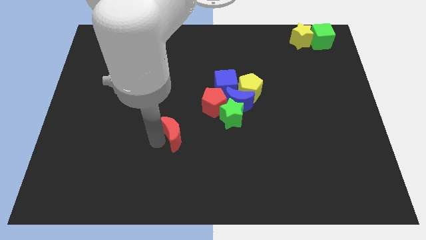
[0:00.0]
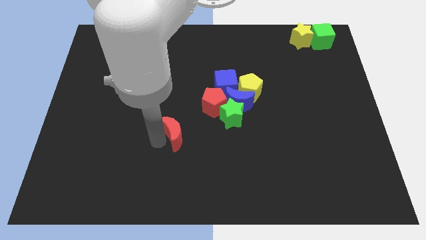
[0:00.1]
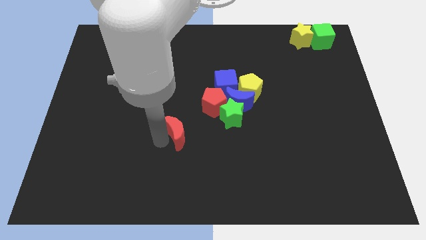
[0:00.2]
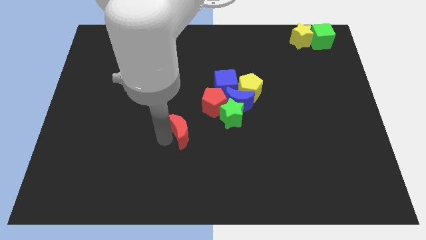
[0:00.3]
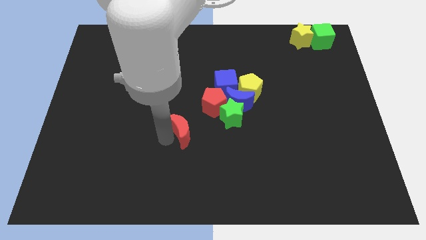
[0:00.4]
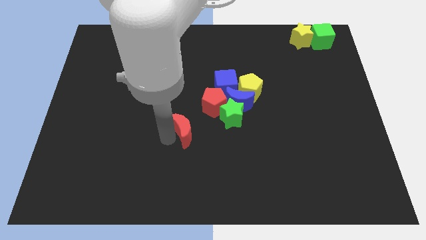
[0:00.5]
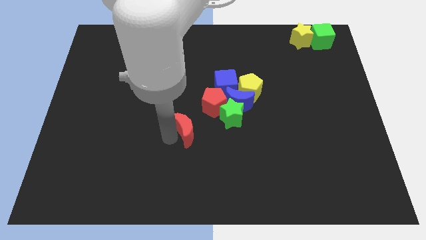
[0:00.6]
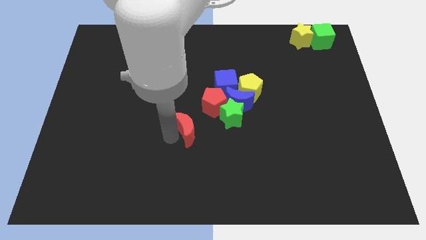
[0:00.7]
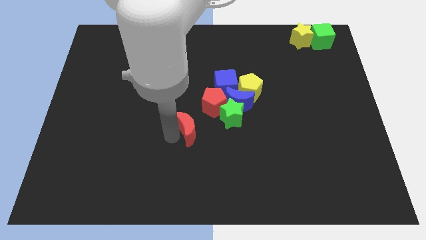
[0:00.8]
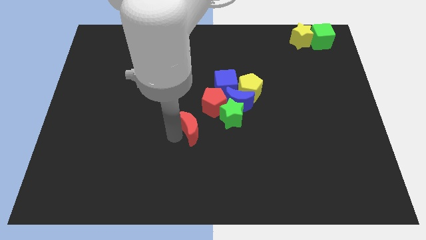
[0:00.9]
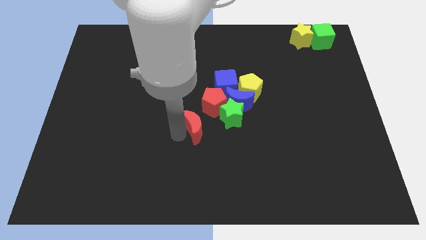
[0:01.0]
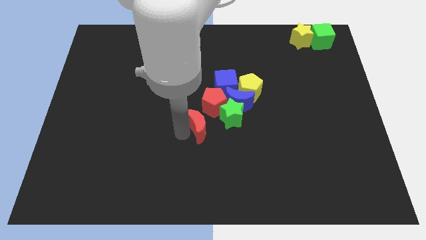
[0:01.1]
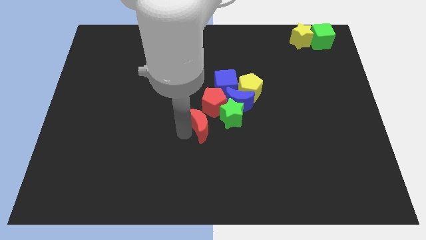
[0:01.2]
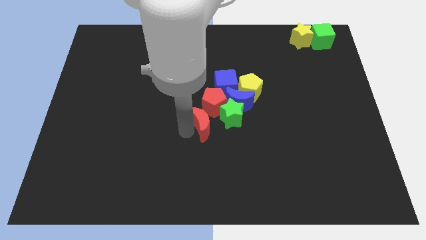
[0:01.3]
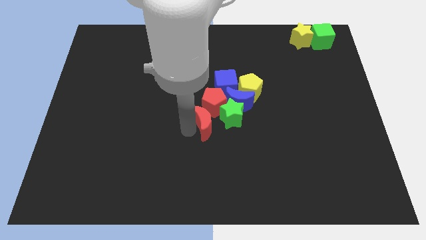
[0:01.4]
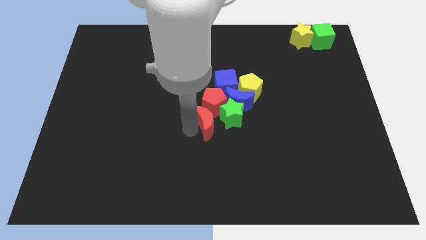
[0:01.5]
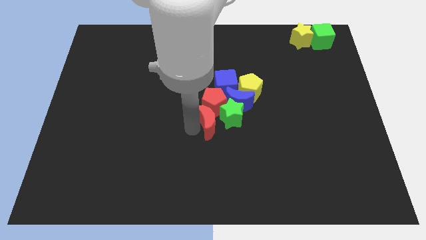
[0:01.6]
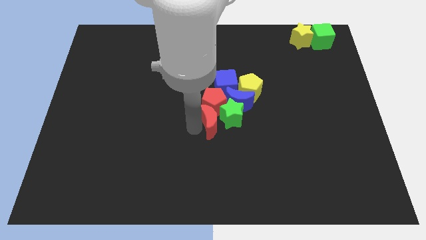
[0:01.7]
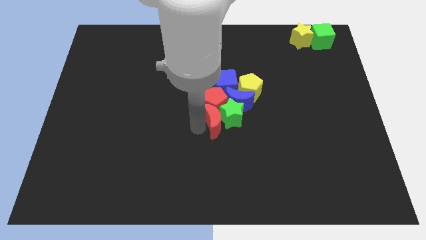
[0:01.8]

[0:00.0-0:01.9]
slide the red moon into the red pentagon

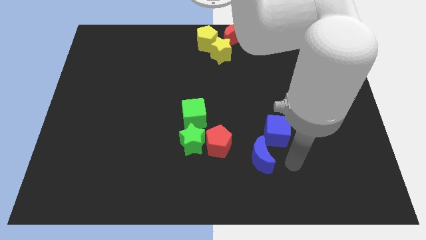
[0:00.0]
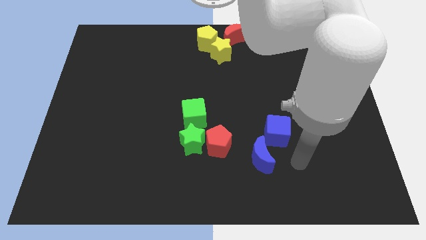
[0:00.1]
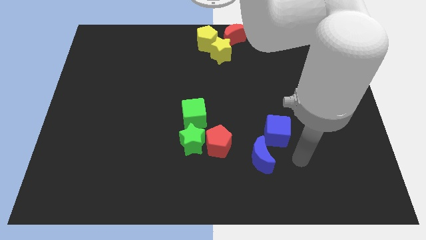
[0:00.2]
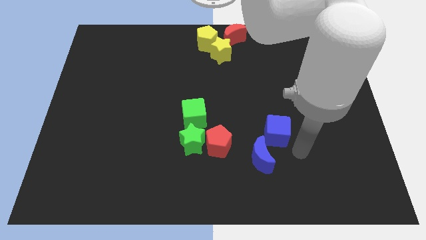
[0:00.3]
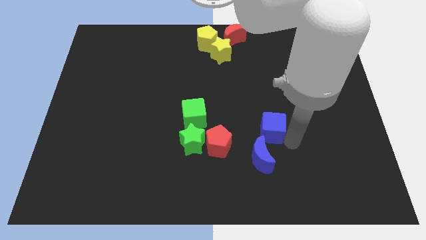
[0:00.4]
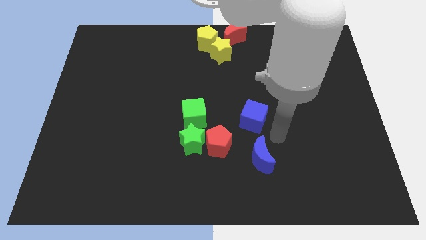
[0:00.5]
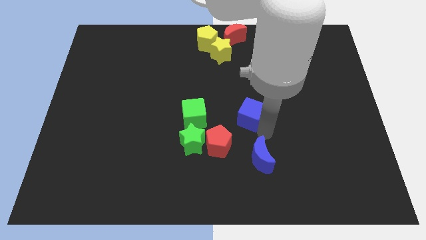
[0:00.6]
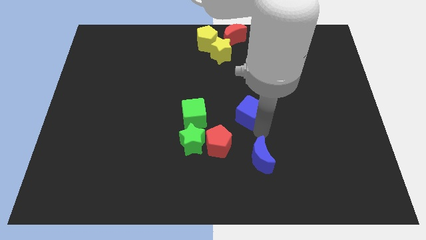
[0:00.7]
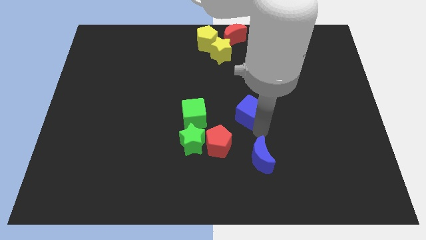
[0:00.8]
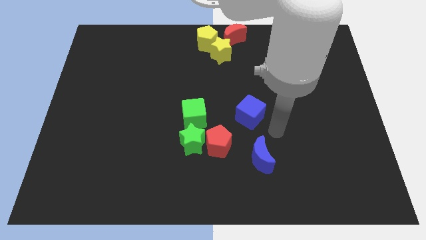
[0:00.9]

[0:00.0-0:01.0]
put the blue cube parallel to green cube

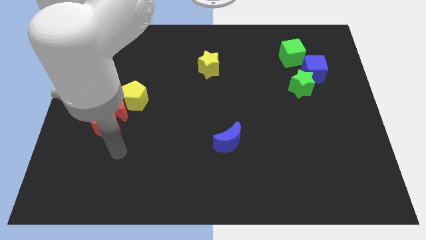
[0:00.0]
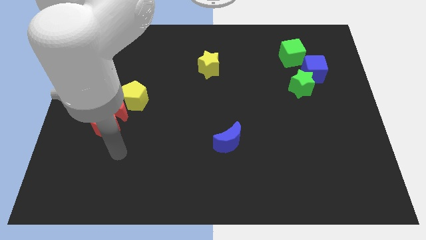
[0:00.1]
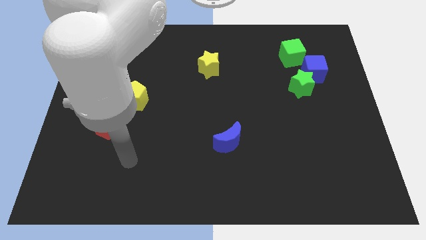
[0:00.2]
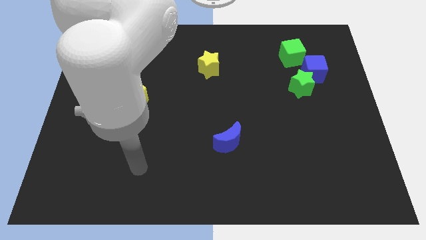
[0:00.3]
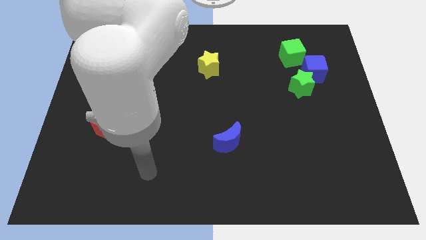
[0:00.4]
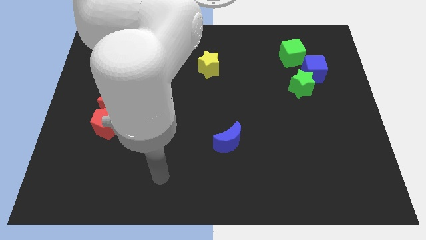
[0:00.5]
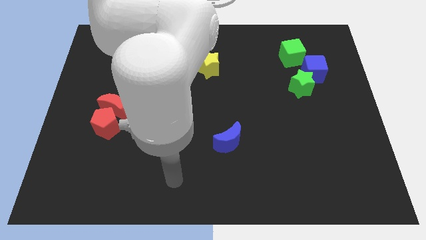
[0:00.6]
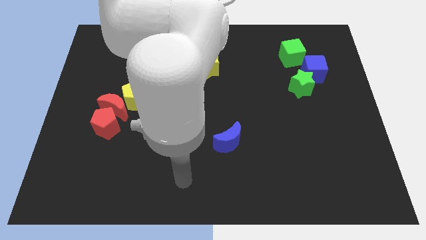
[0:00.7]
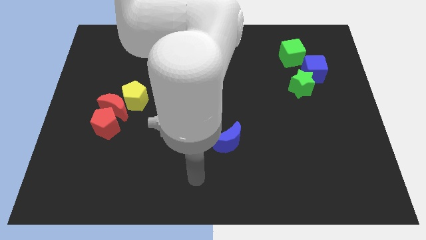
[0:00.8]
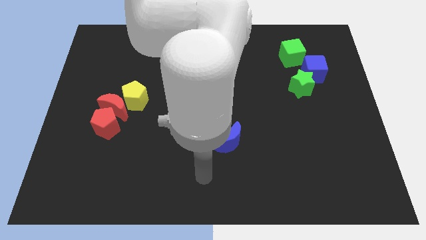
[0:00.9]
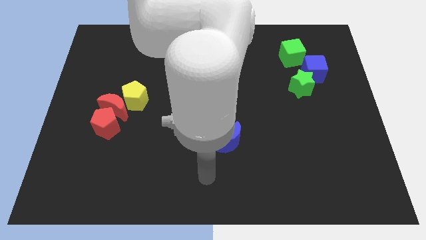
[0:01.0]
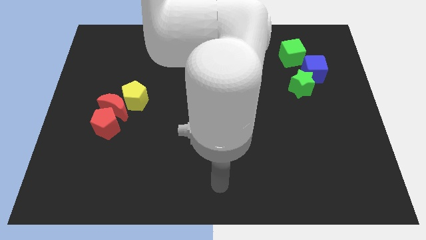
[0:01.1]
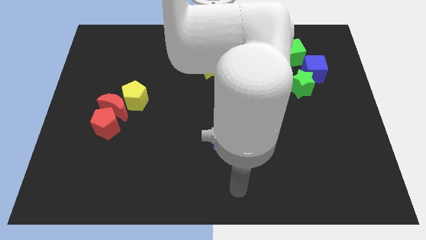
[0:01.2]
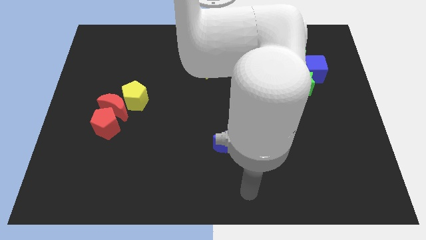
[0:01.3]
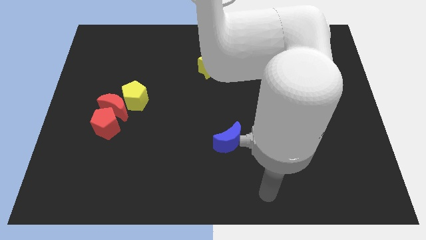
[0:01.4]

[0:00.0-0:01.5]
move the arm to the bottom center

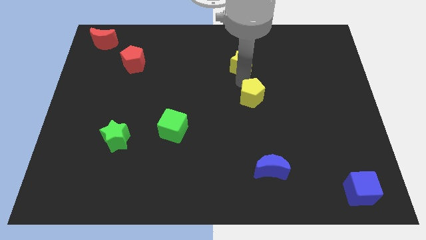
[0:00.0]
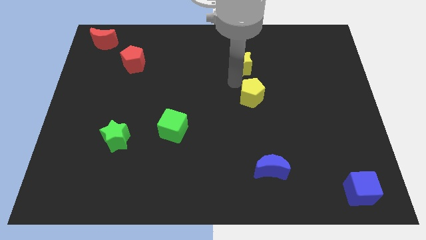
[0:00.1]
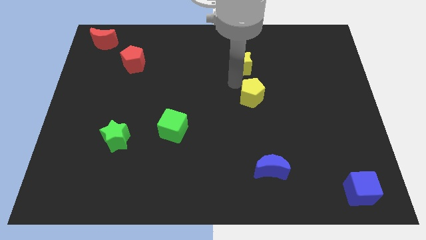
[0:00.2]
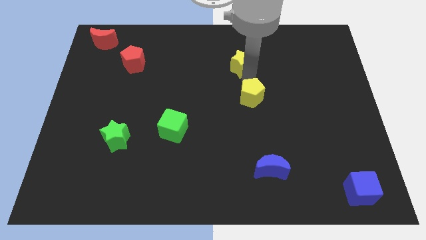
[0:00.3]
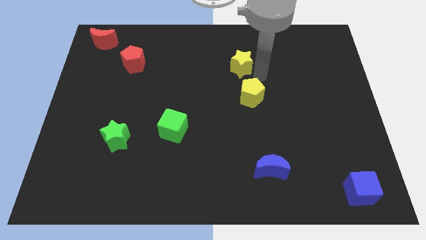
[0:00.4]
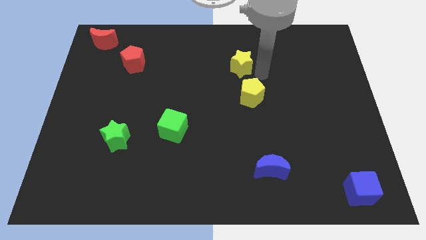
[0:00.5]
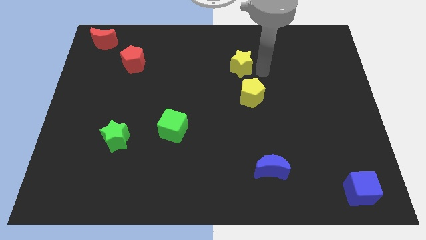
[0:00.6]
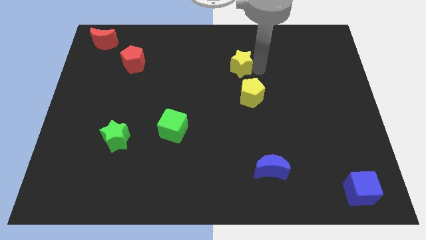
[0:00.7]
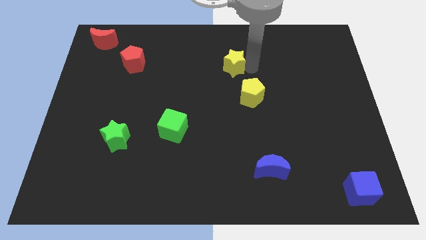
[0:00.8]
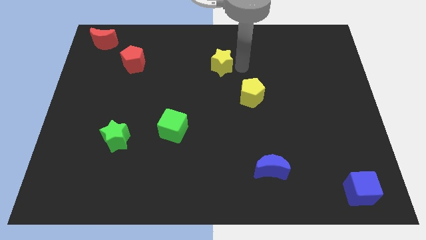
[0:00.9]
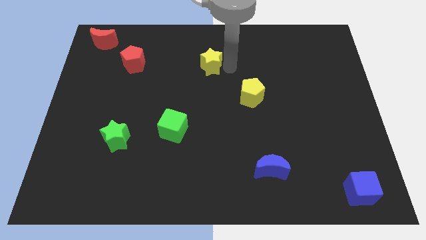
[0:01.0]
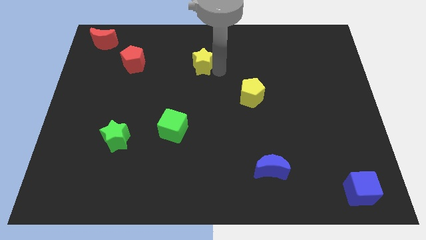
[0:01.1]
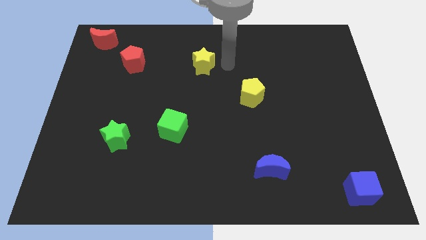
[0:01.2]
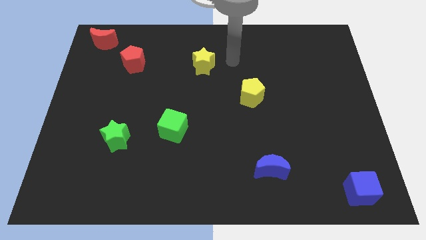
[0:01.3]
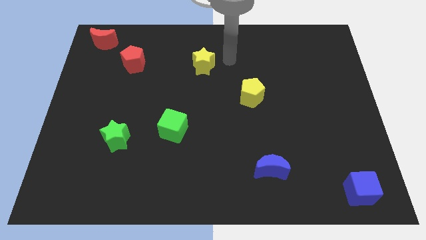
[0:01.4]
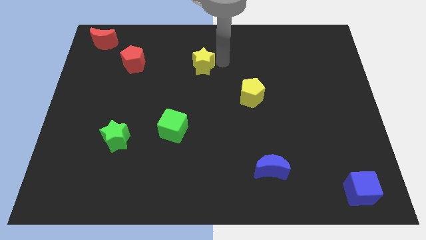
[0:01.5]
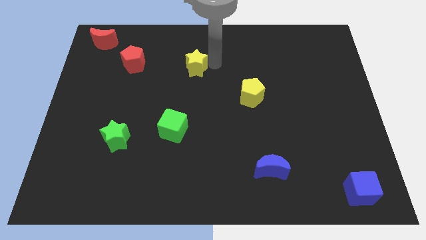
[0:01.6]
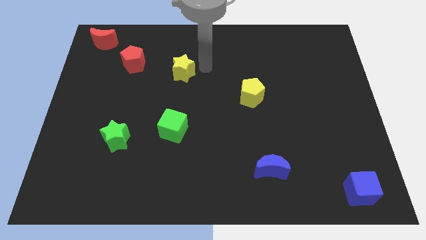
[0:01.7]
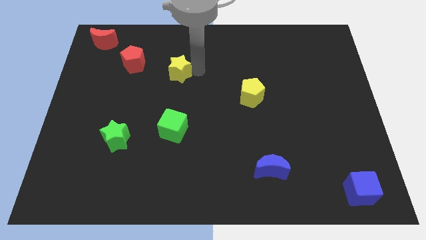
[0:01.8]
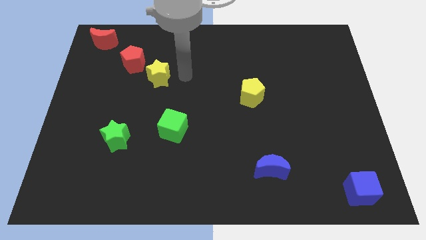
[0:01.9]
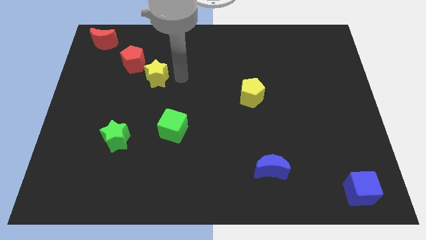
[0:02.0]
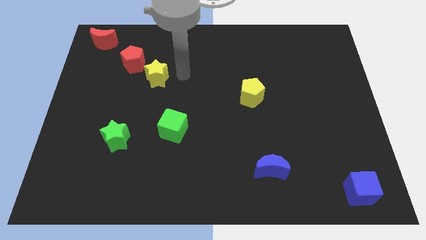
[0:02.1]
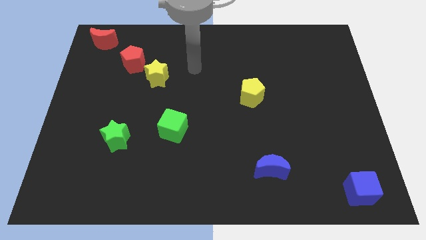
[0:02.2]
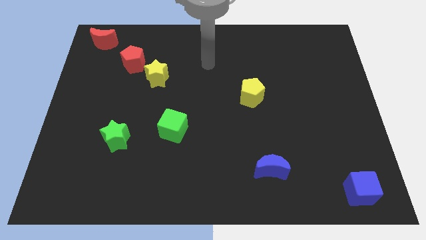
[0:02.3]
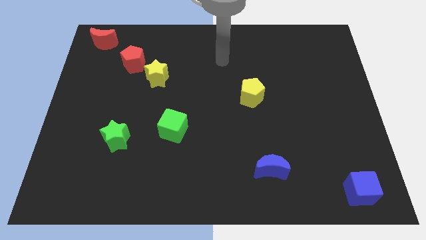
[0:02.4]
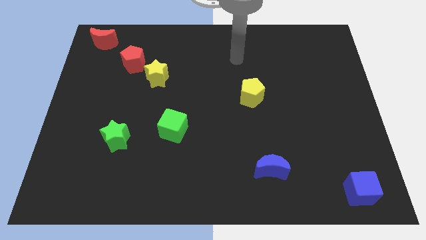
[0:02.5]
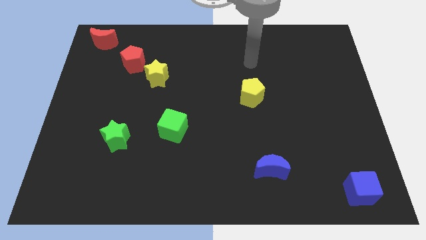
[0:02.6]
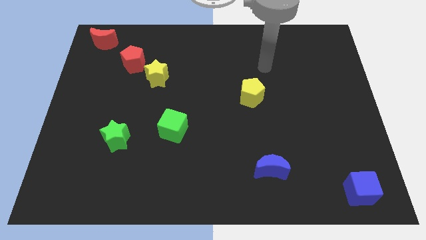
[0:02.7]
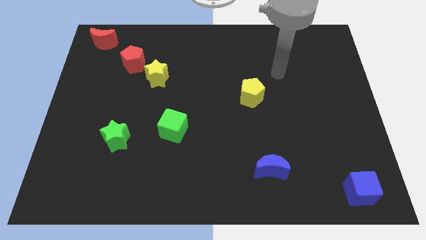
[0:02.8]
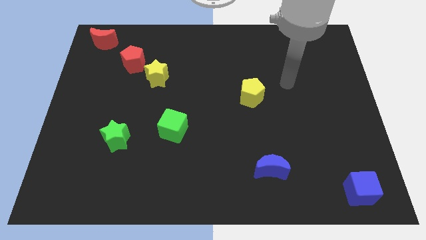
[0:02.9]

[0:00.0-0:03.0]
push the yellow star to the bottom right of the red pentagon

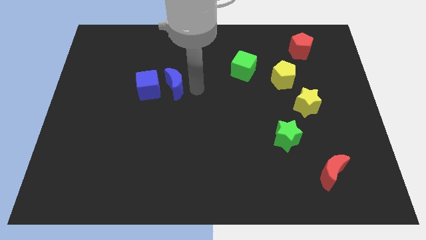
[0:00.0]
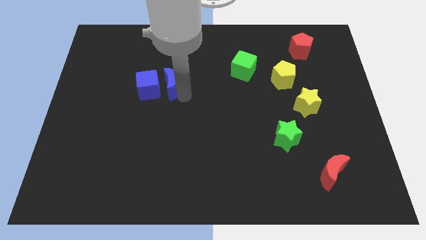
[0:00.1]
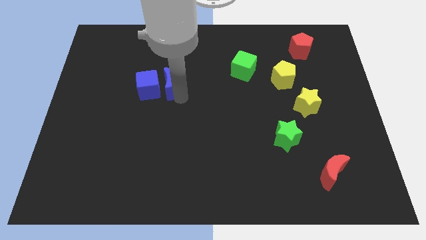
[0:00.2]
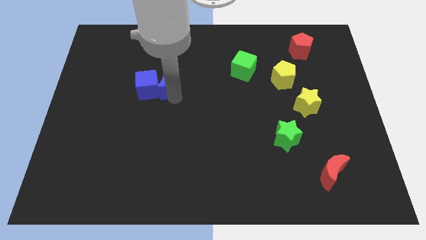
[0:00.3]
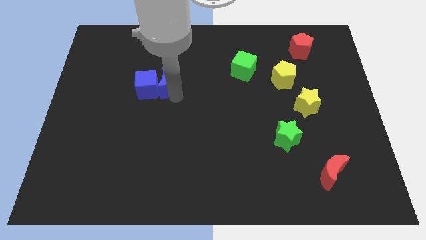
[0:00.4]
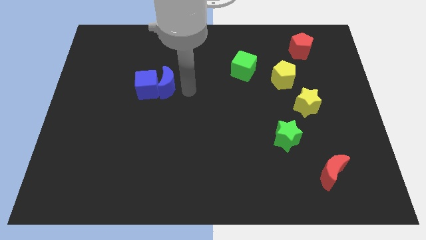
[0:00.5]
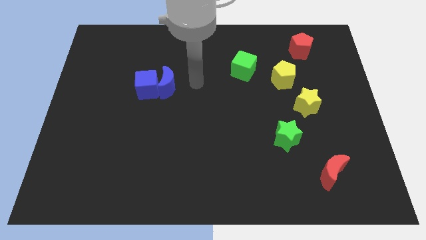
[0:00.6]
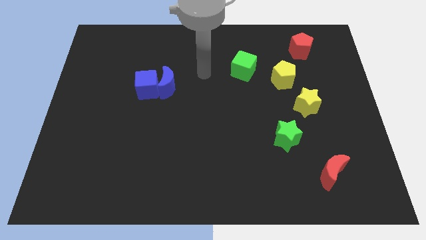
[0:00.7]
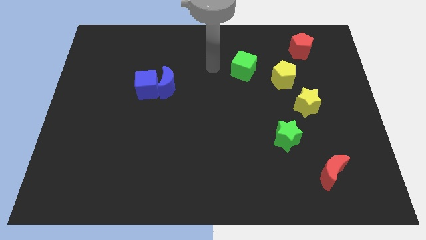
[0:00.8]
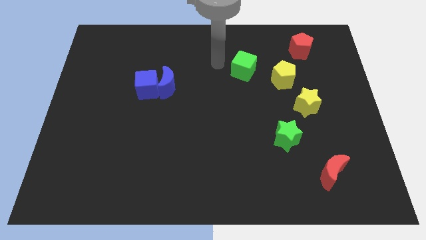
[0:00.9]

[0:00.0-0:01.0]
push the blue crescent into the blue cube

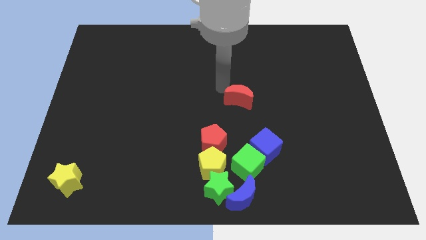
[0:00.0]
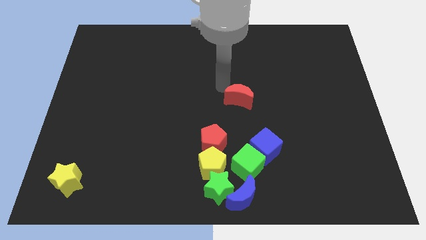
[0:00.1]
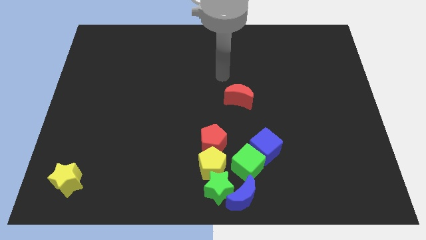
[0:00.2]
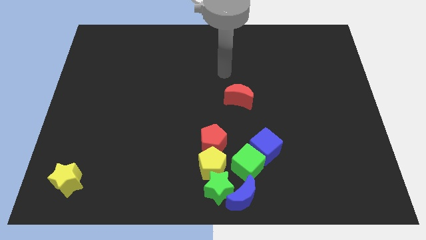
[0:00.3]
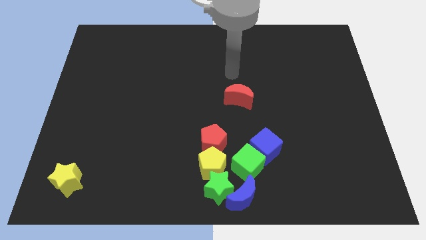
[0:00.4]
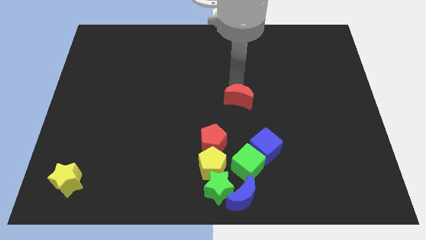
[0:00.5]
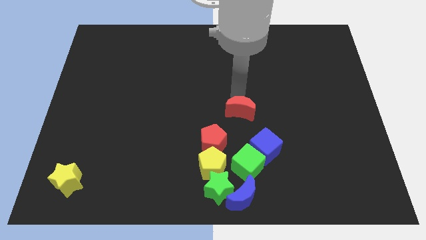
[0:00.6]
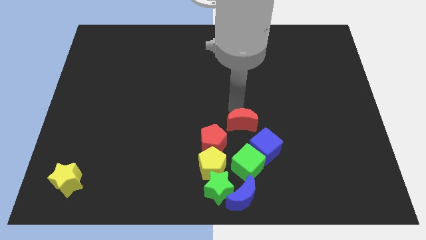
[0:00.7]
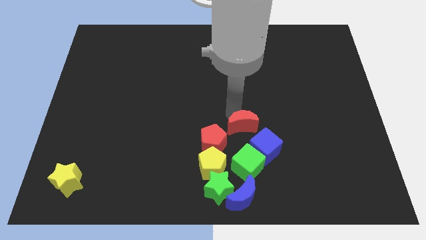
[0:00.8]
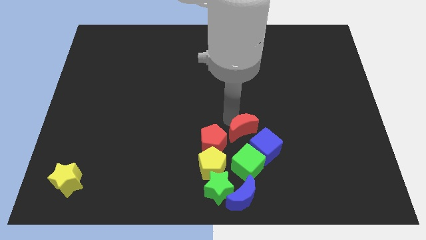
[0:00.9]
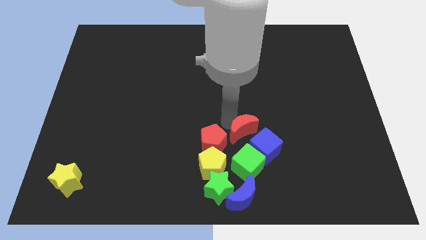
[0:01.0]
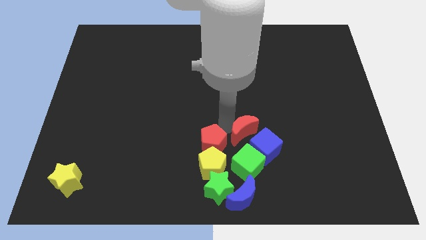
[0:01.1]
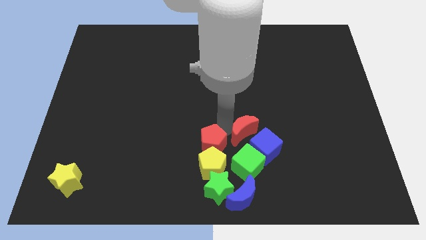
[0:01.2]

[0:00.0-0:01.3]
place red moon to the right of the red pentagon
